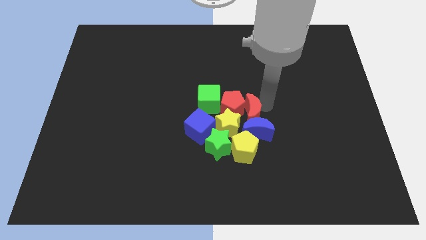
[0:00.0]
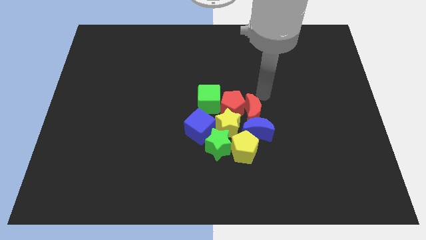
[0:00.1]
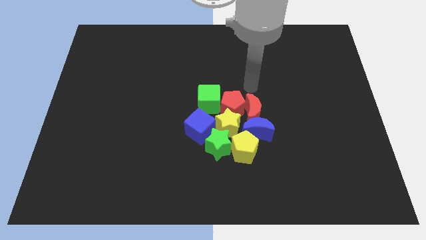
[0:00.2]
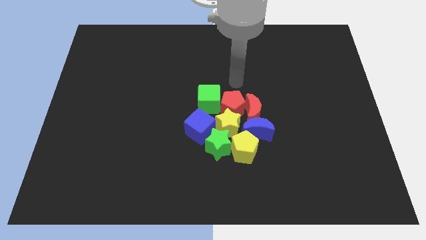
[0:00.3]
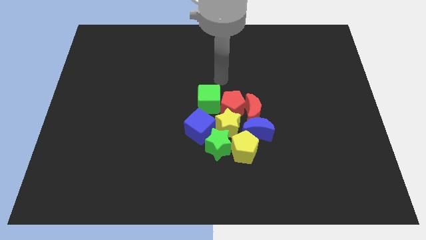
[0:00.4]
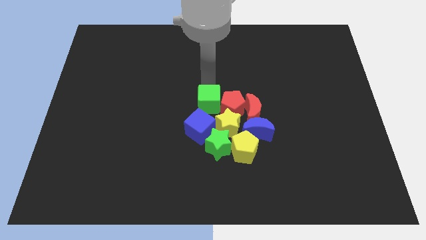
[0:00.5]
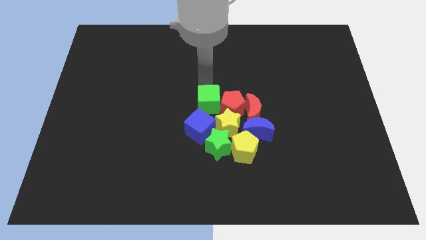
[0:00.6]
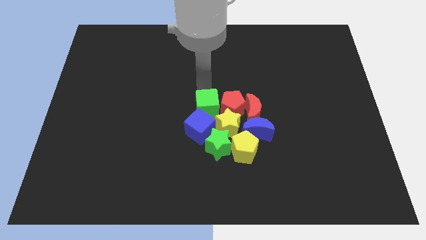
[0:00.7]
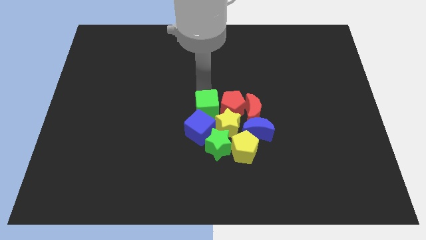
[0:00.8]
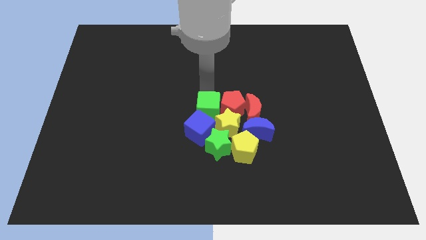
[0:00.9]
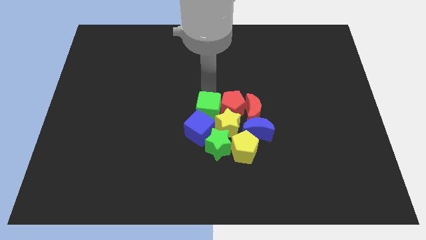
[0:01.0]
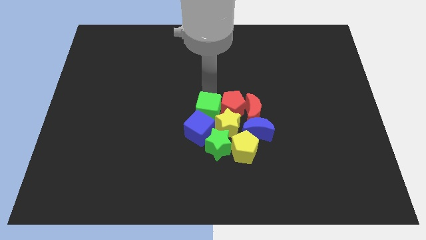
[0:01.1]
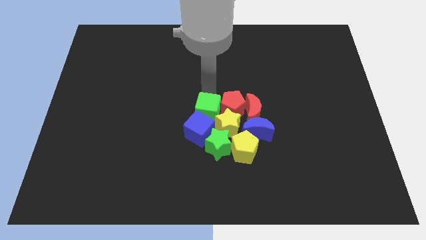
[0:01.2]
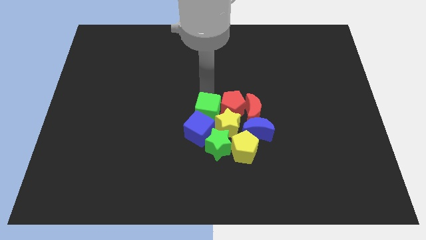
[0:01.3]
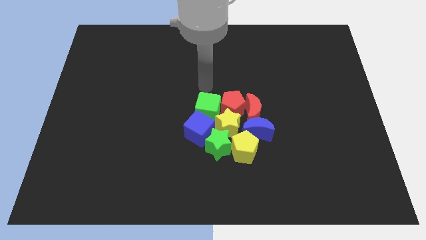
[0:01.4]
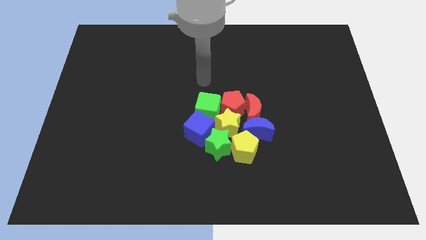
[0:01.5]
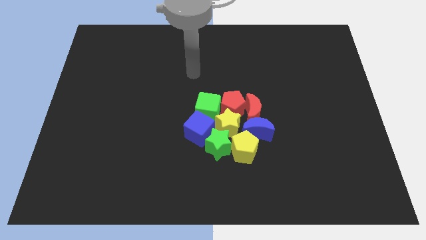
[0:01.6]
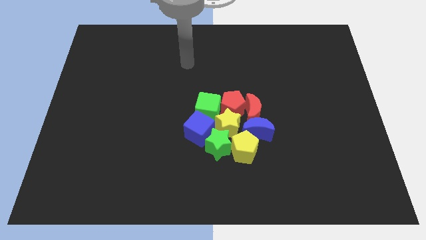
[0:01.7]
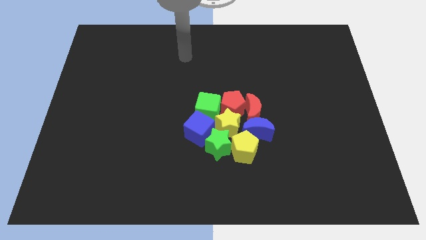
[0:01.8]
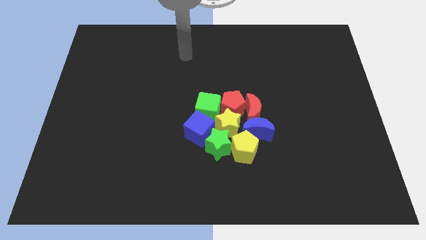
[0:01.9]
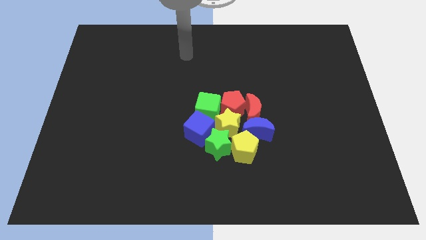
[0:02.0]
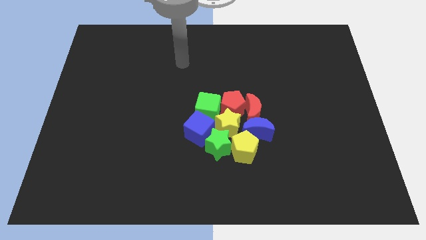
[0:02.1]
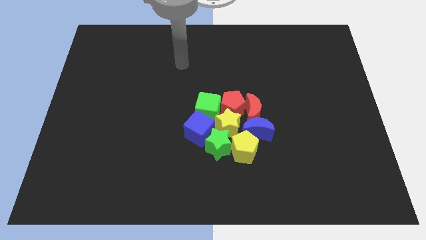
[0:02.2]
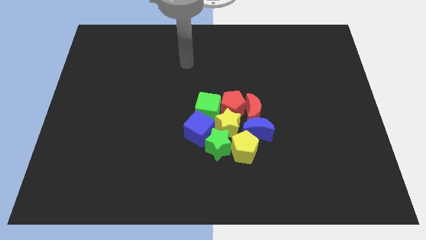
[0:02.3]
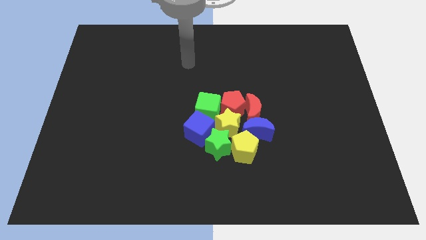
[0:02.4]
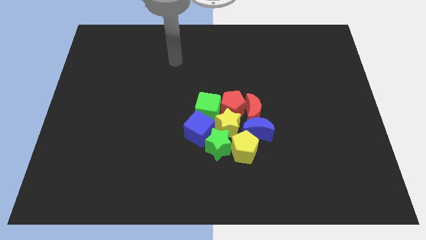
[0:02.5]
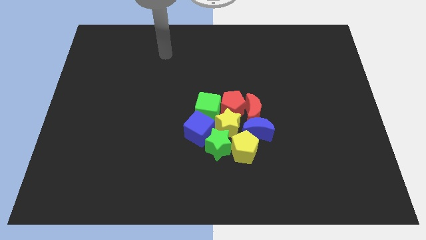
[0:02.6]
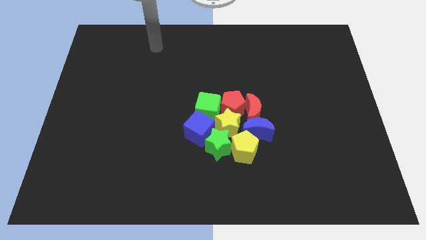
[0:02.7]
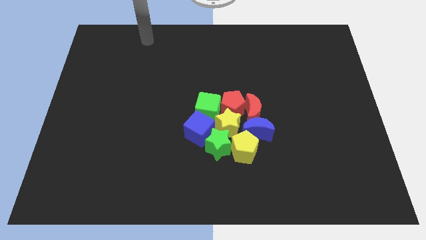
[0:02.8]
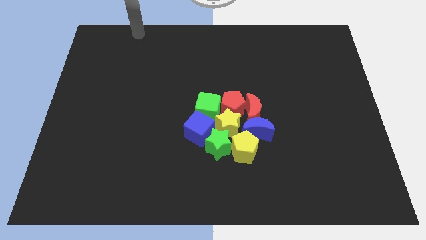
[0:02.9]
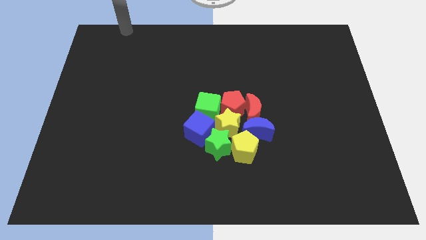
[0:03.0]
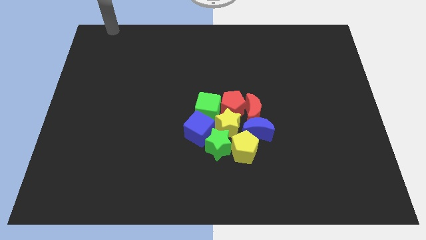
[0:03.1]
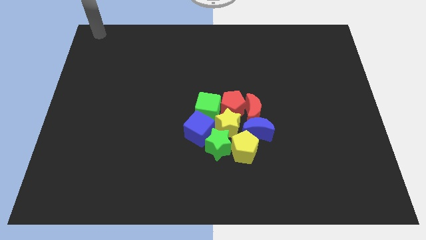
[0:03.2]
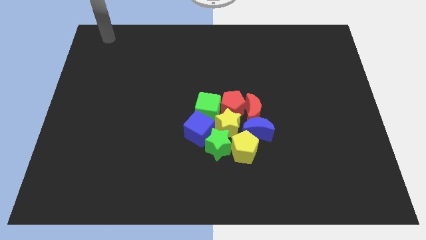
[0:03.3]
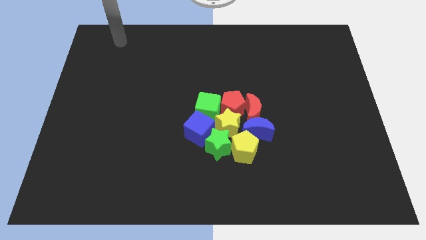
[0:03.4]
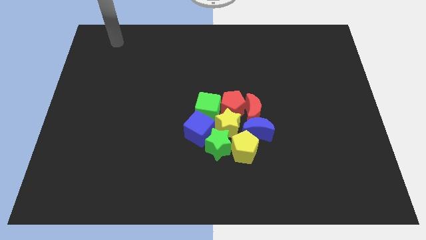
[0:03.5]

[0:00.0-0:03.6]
move green cube slightly to the down

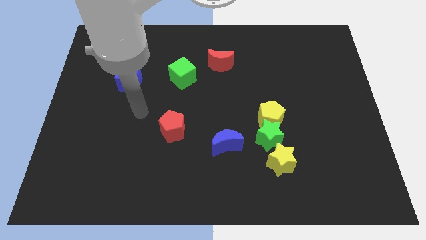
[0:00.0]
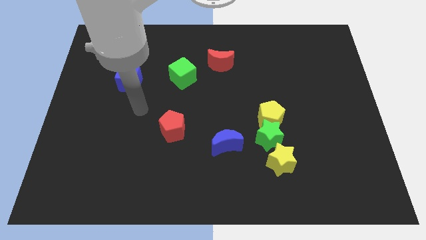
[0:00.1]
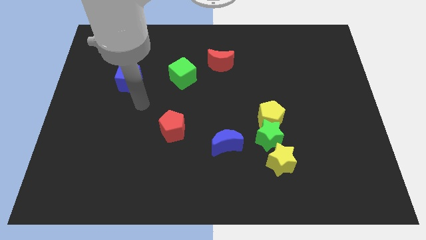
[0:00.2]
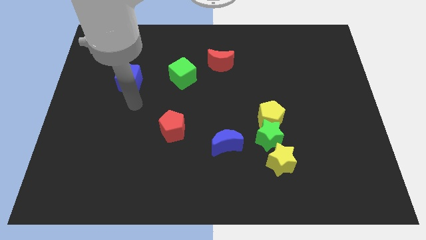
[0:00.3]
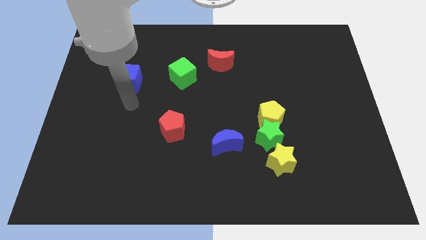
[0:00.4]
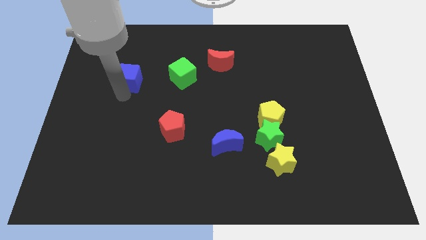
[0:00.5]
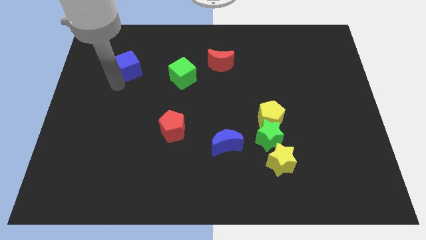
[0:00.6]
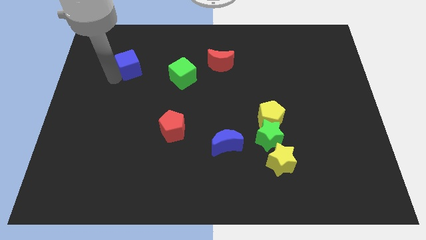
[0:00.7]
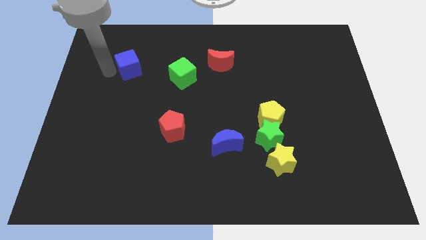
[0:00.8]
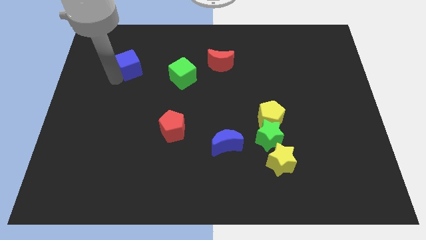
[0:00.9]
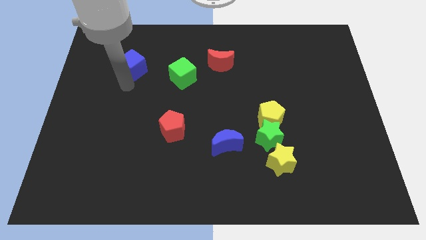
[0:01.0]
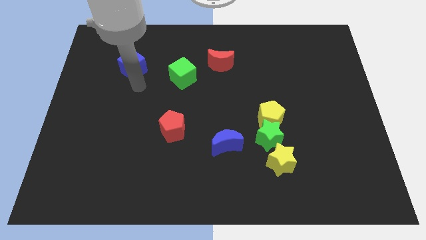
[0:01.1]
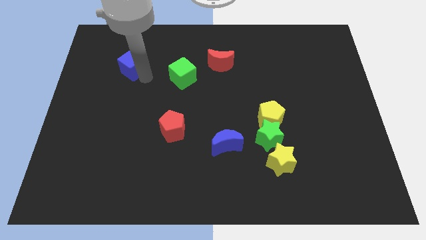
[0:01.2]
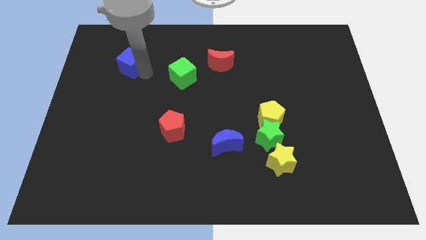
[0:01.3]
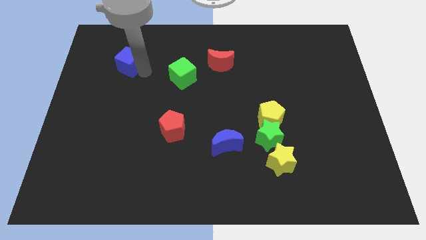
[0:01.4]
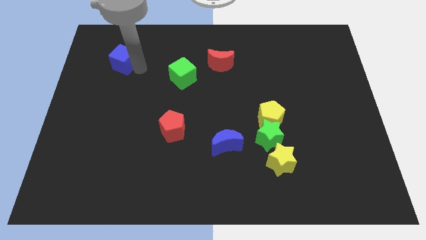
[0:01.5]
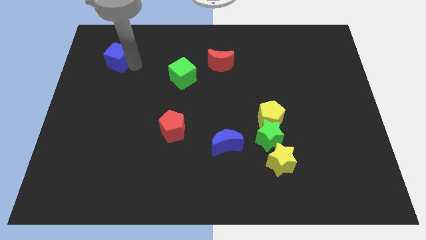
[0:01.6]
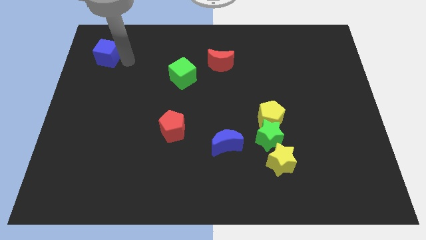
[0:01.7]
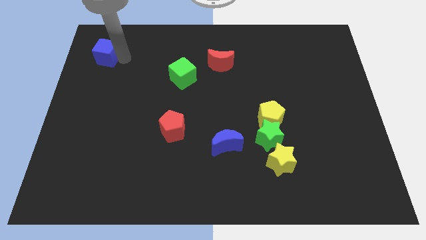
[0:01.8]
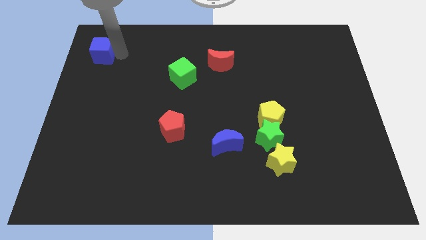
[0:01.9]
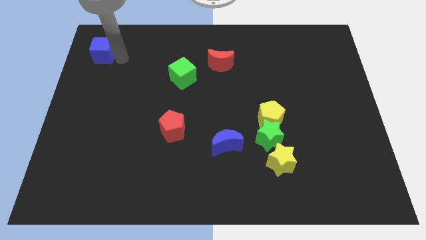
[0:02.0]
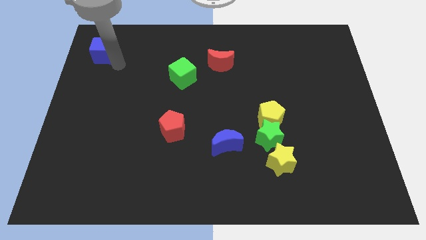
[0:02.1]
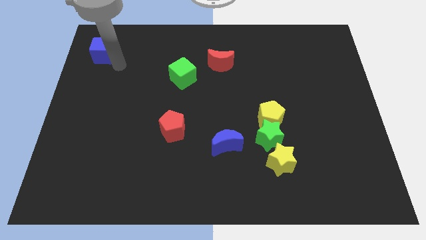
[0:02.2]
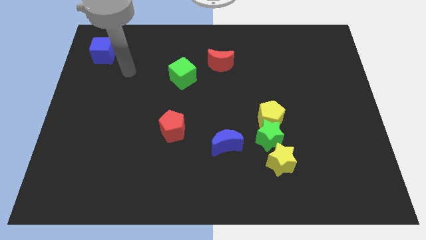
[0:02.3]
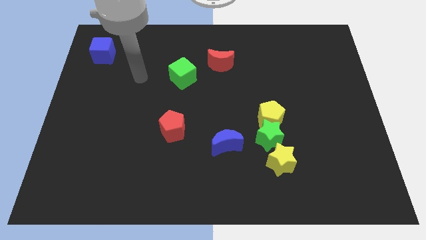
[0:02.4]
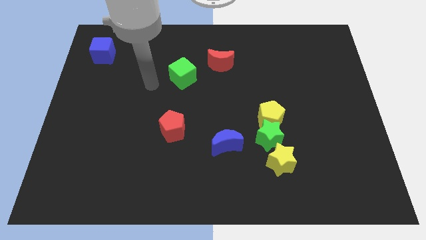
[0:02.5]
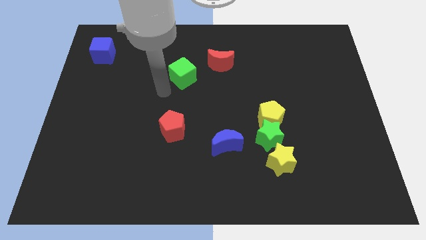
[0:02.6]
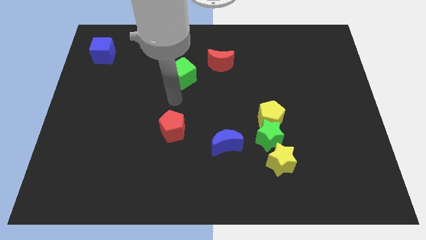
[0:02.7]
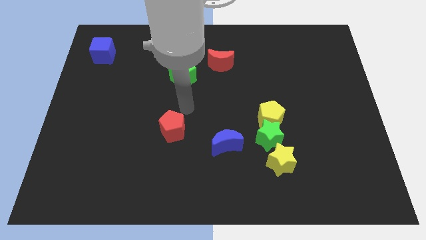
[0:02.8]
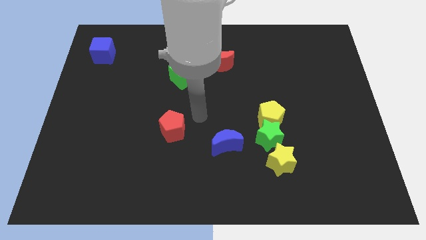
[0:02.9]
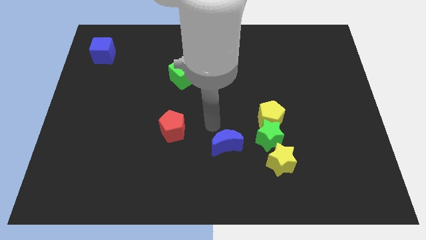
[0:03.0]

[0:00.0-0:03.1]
move the blue cube towards the top left of the board

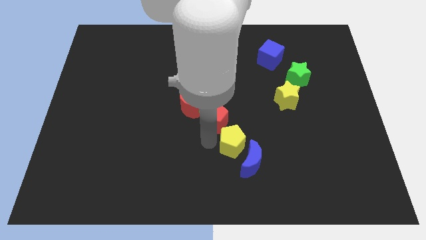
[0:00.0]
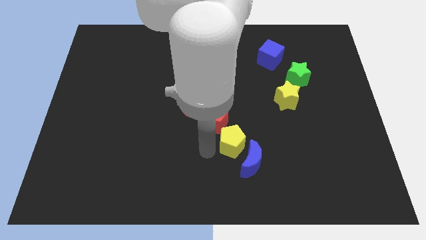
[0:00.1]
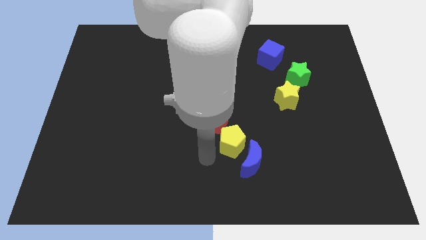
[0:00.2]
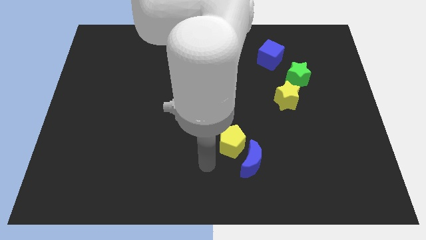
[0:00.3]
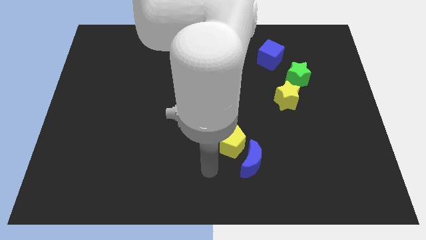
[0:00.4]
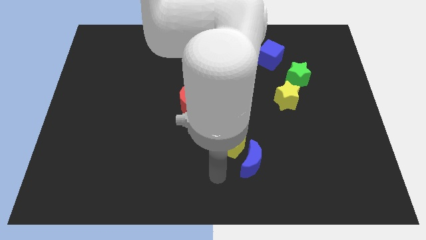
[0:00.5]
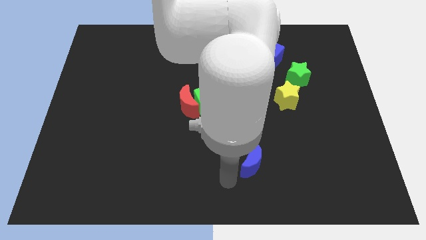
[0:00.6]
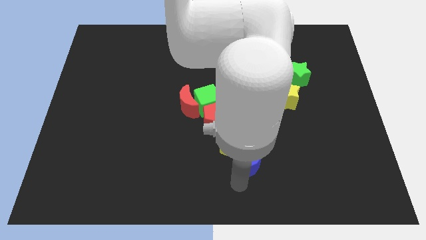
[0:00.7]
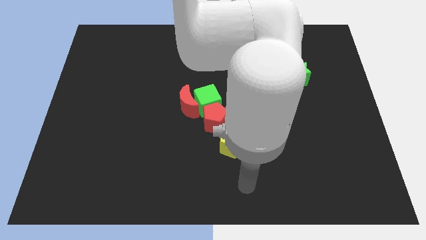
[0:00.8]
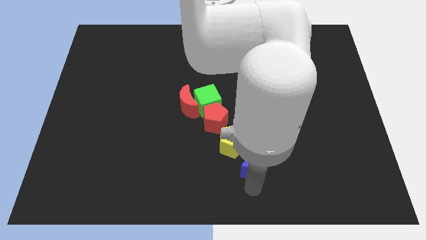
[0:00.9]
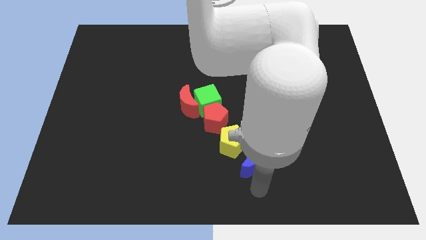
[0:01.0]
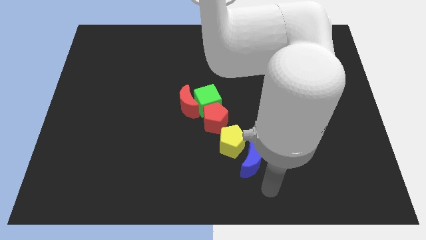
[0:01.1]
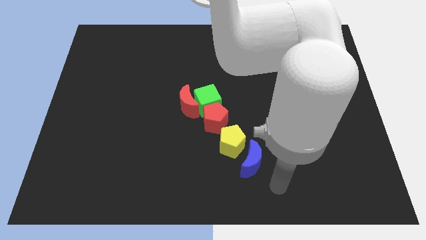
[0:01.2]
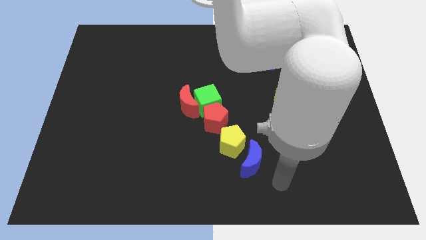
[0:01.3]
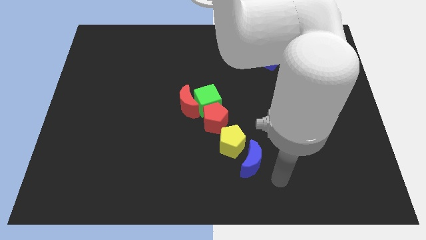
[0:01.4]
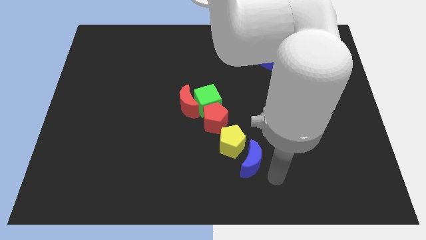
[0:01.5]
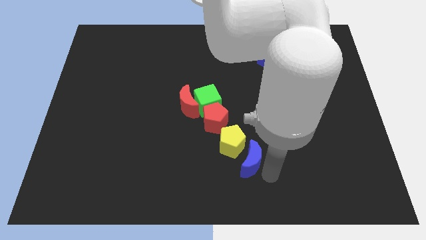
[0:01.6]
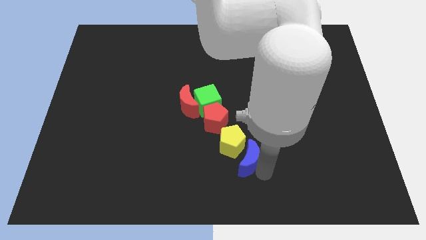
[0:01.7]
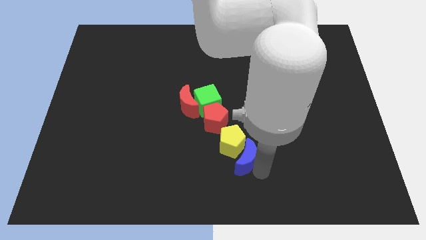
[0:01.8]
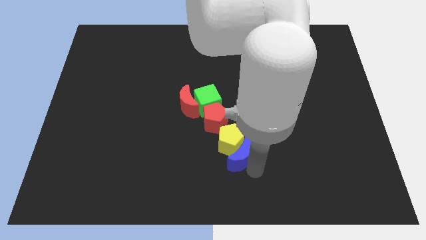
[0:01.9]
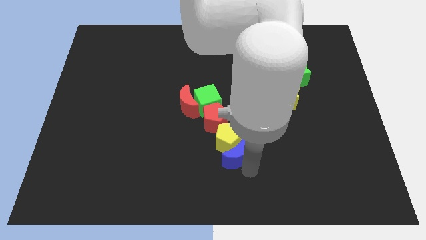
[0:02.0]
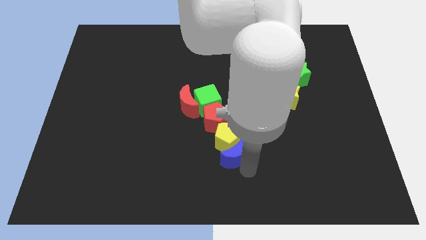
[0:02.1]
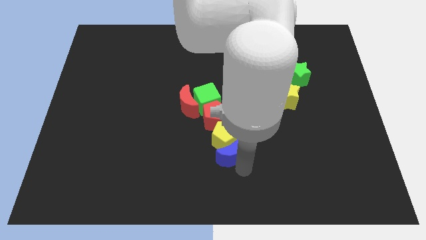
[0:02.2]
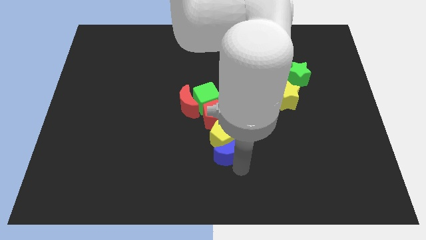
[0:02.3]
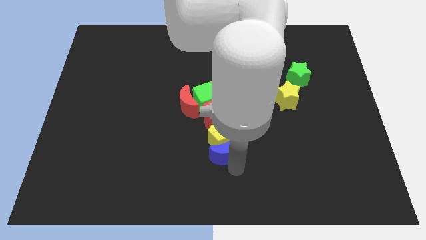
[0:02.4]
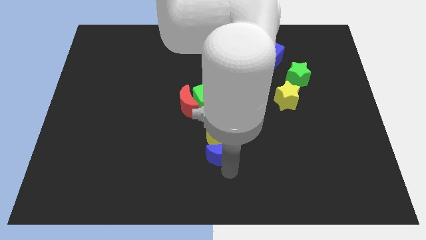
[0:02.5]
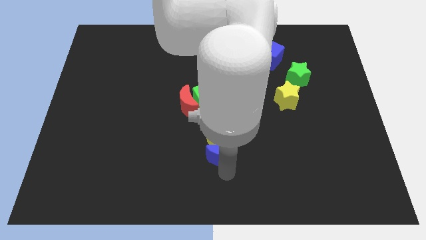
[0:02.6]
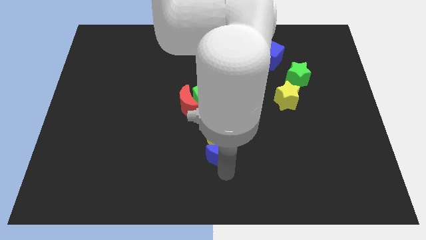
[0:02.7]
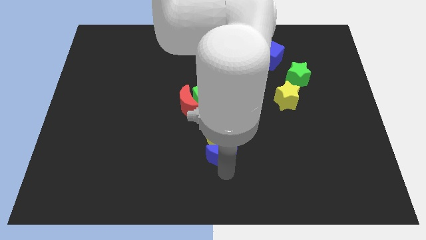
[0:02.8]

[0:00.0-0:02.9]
push the blue crescent into yellow pentagon
